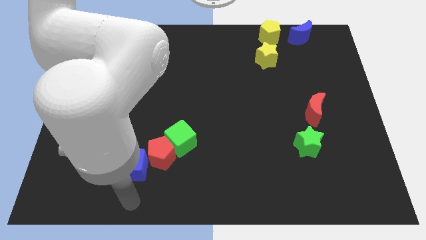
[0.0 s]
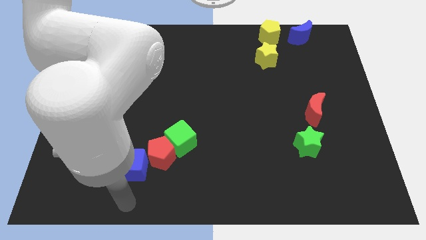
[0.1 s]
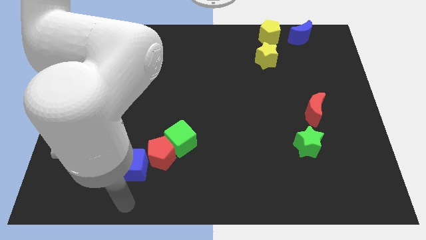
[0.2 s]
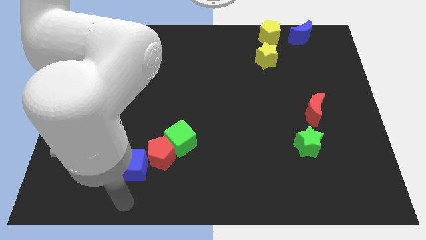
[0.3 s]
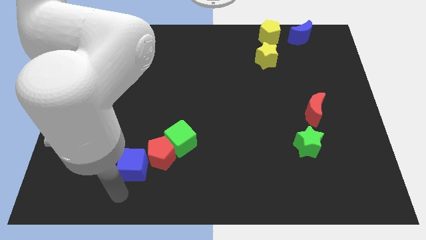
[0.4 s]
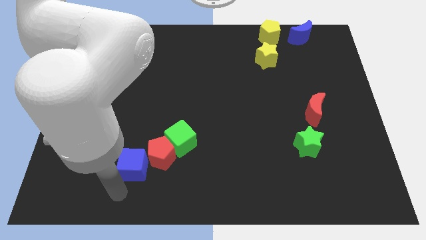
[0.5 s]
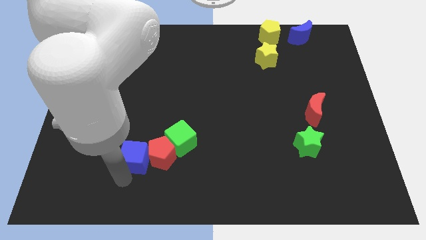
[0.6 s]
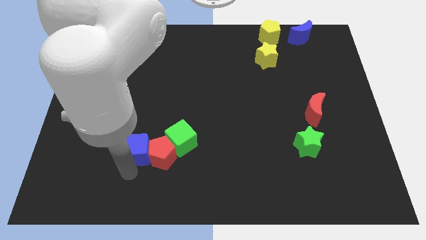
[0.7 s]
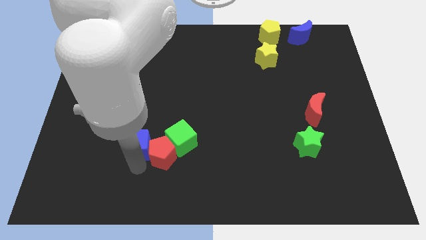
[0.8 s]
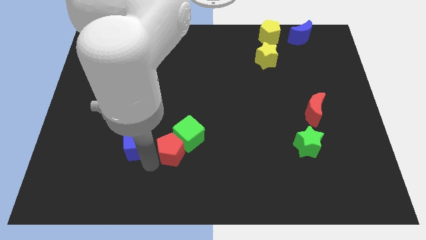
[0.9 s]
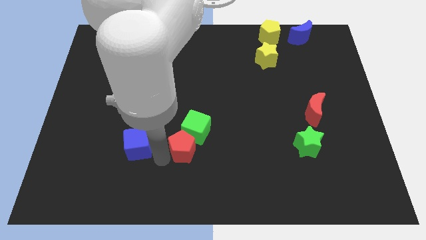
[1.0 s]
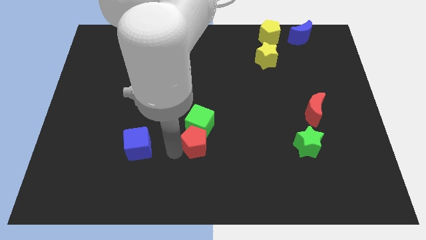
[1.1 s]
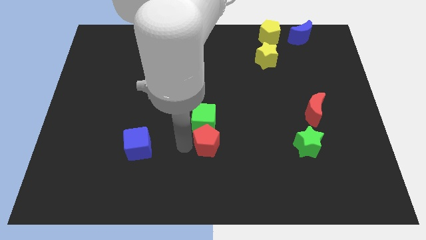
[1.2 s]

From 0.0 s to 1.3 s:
separate the blue cube from the green cube and red pentagon

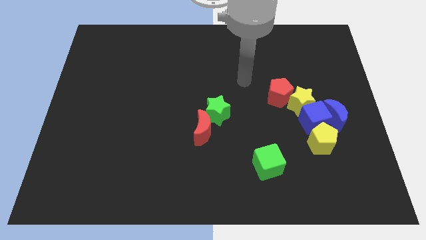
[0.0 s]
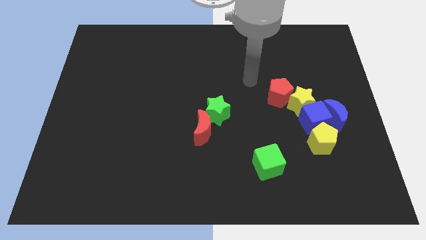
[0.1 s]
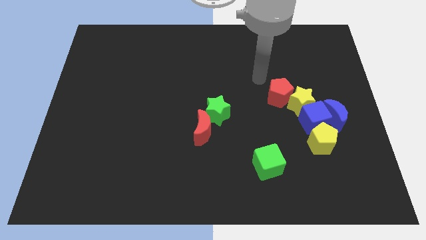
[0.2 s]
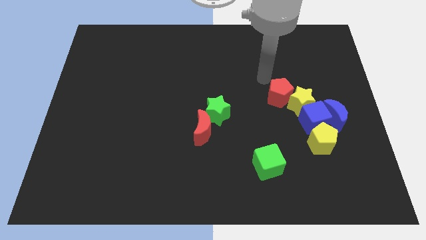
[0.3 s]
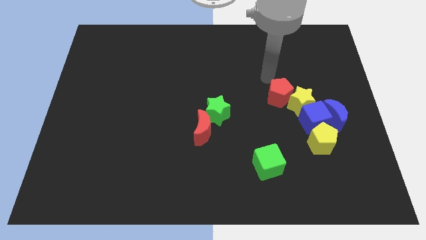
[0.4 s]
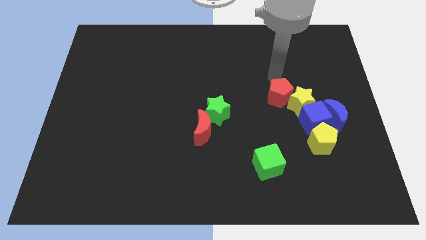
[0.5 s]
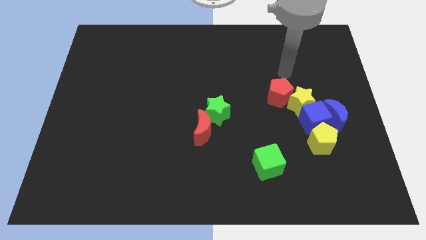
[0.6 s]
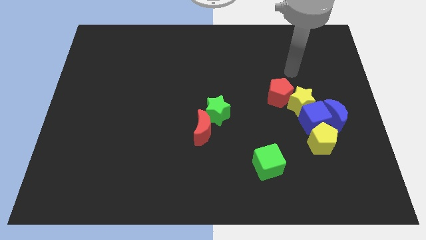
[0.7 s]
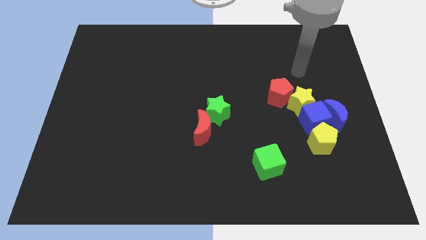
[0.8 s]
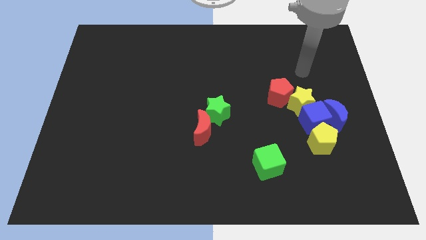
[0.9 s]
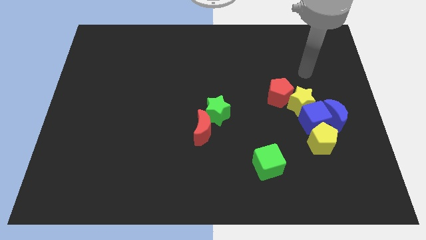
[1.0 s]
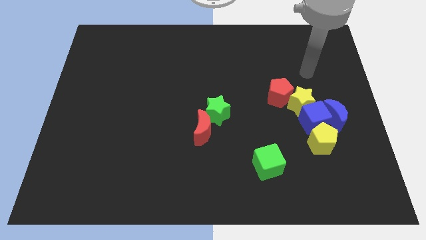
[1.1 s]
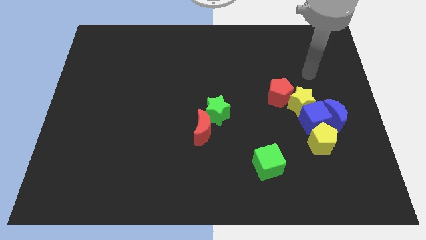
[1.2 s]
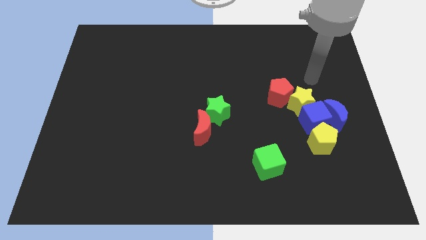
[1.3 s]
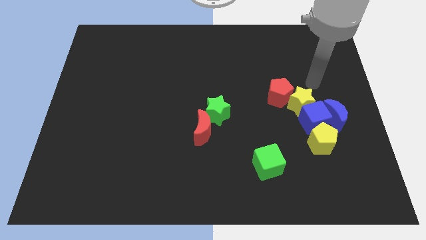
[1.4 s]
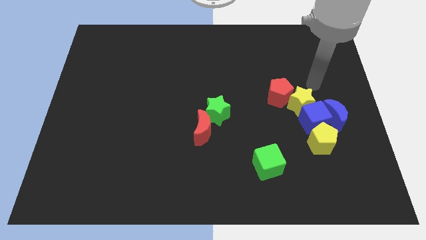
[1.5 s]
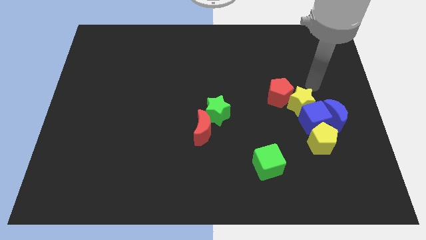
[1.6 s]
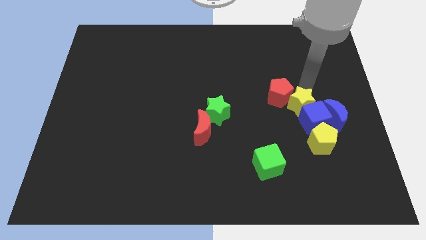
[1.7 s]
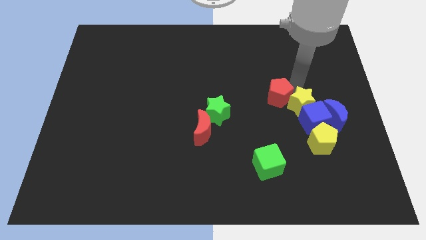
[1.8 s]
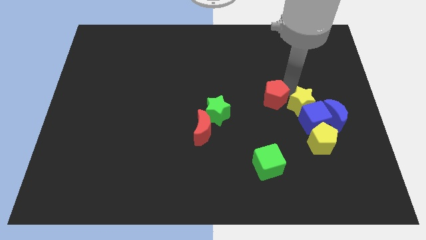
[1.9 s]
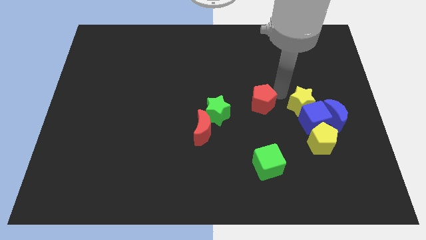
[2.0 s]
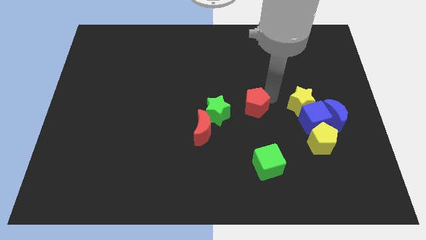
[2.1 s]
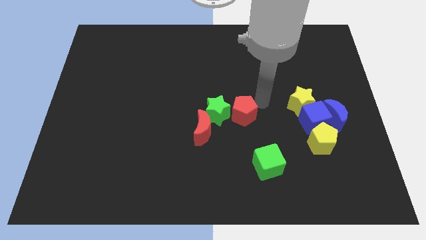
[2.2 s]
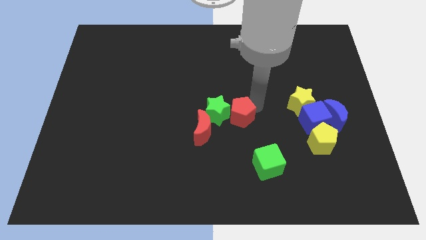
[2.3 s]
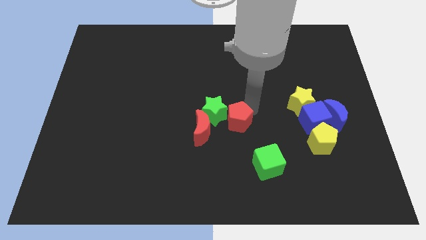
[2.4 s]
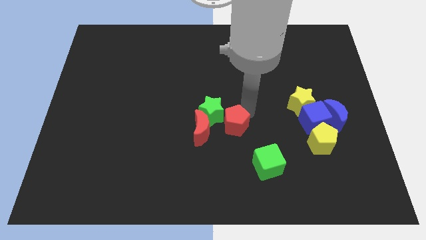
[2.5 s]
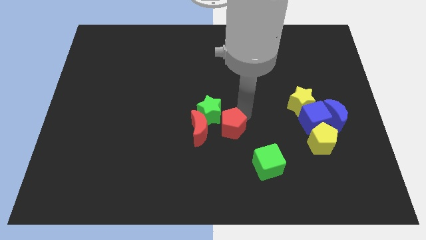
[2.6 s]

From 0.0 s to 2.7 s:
move the red pentagon into the green star

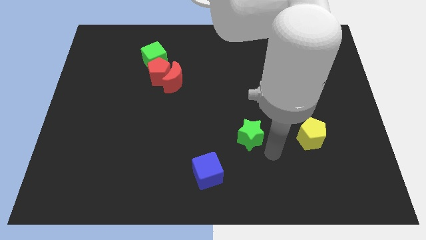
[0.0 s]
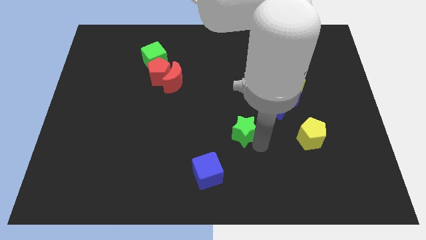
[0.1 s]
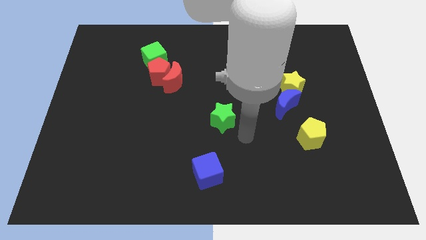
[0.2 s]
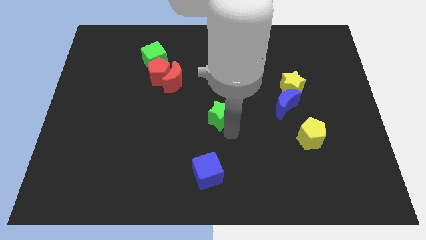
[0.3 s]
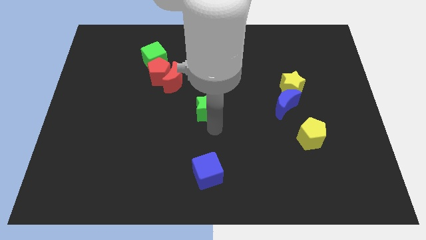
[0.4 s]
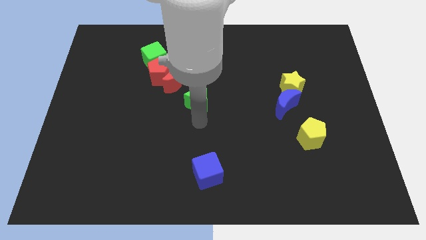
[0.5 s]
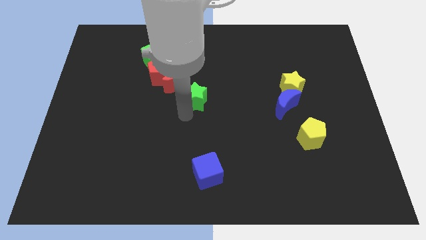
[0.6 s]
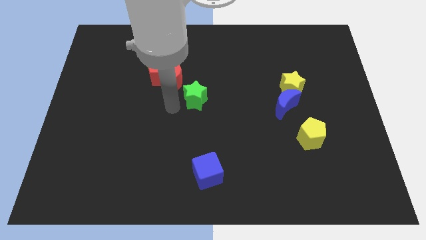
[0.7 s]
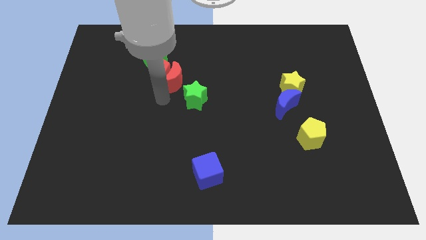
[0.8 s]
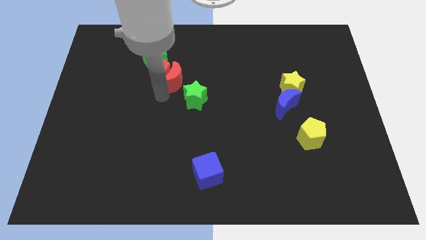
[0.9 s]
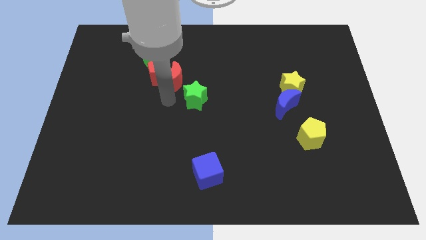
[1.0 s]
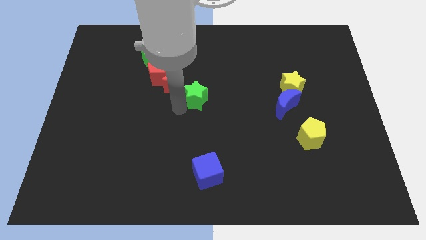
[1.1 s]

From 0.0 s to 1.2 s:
place the green star diagonal to the red moon

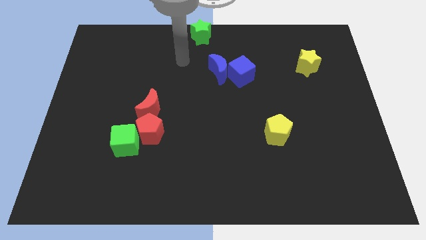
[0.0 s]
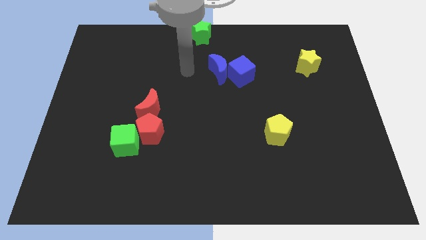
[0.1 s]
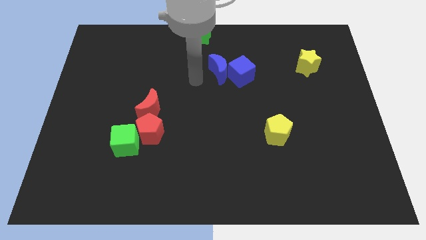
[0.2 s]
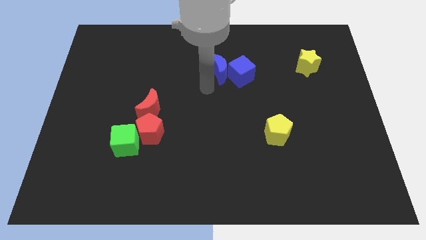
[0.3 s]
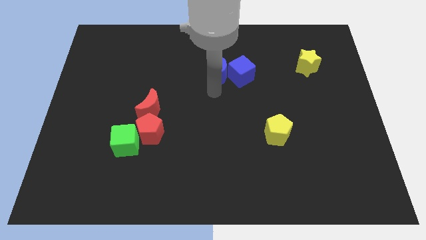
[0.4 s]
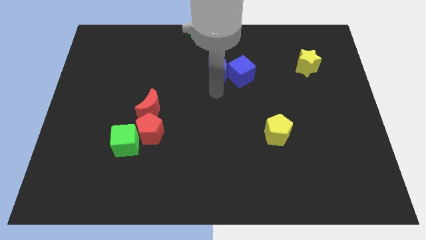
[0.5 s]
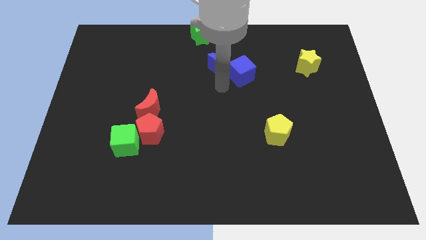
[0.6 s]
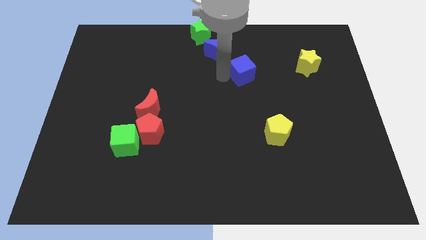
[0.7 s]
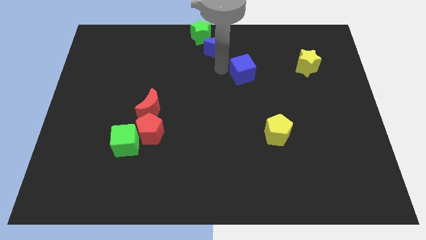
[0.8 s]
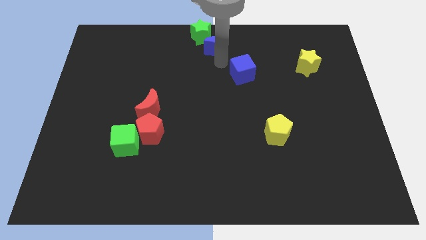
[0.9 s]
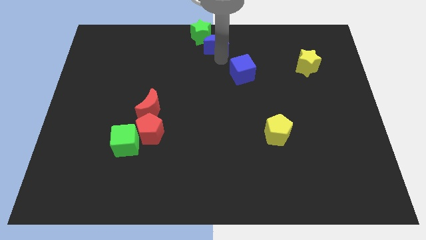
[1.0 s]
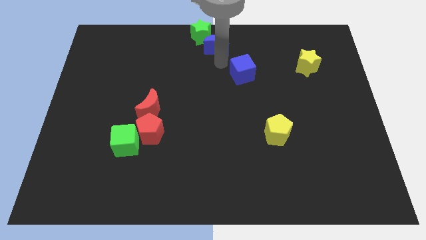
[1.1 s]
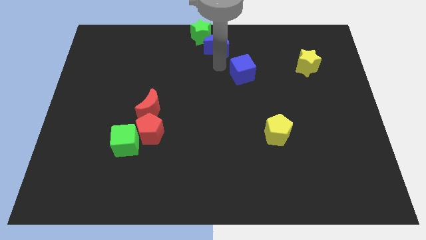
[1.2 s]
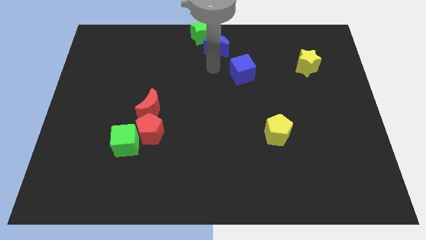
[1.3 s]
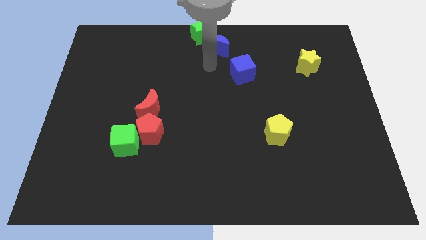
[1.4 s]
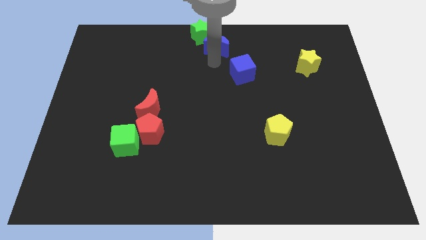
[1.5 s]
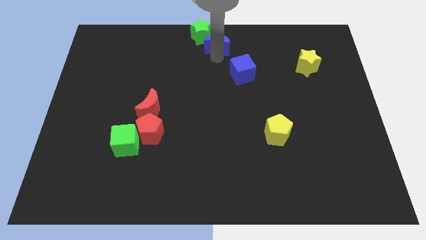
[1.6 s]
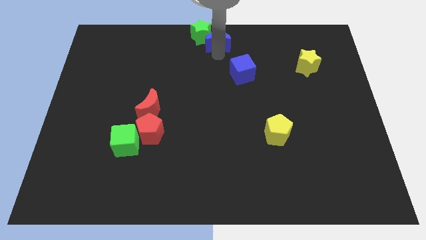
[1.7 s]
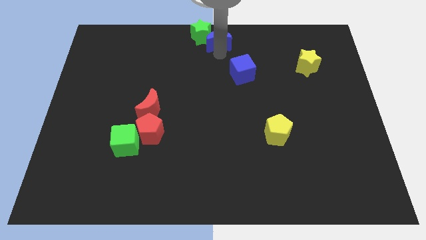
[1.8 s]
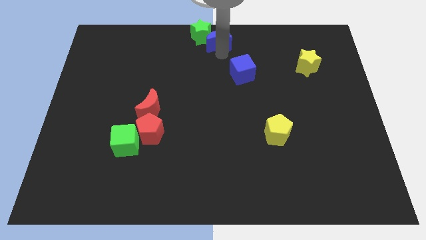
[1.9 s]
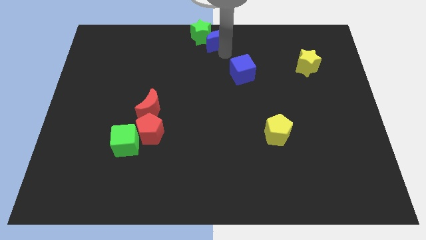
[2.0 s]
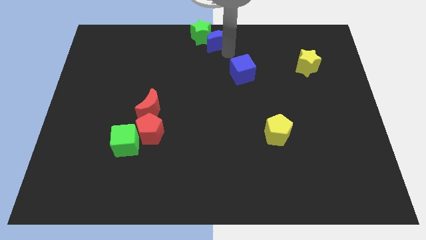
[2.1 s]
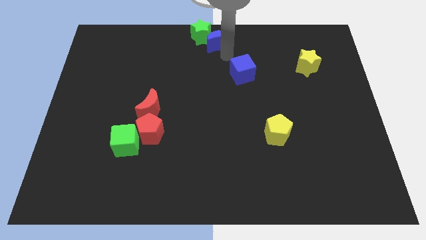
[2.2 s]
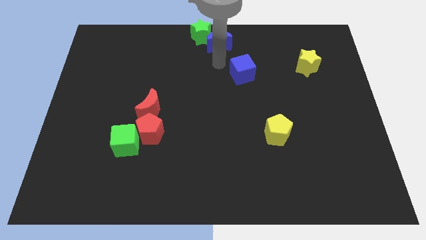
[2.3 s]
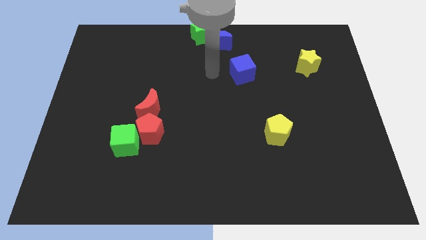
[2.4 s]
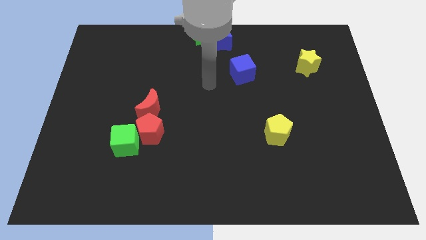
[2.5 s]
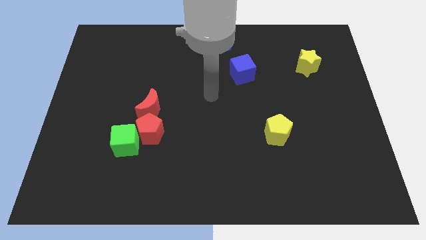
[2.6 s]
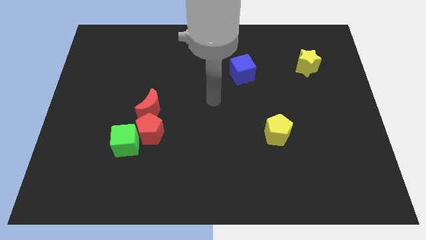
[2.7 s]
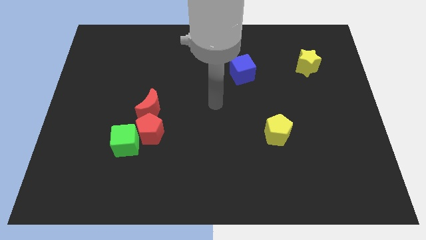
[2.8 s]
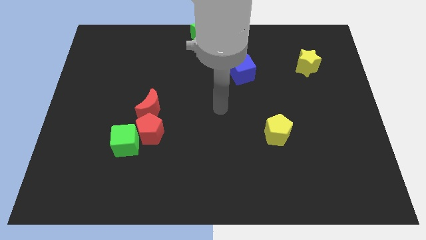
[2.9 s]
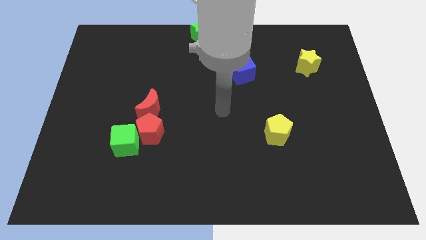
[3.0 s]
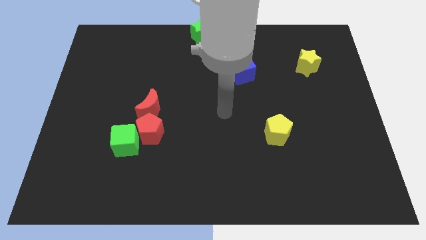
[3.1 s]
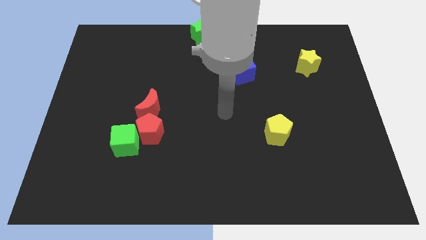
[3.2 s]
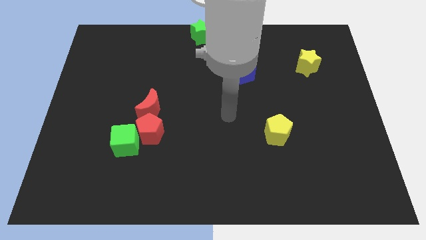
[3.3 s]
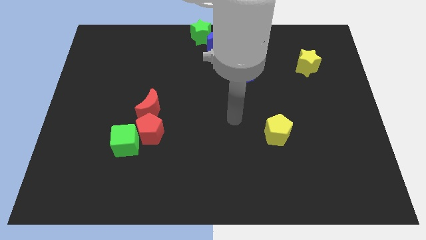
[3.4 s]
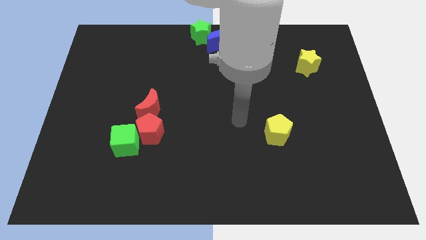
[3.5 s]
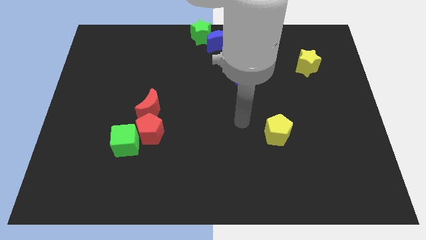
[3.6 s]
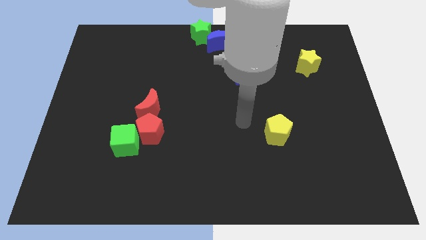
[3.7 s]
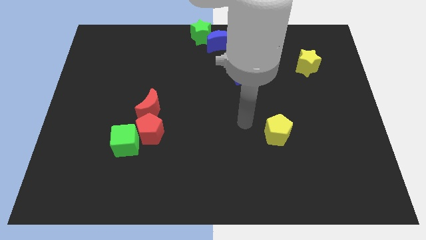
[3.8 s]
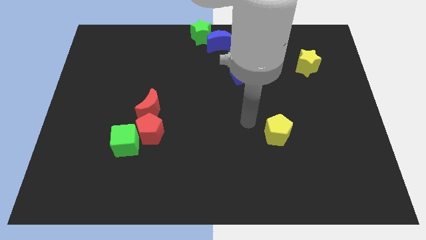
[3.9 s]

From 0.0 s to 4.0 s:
place the blue crescent to the bottom right of the green star
